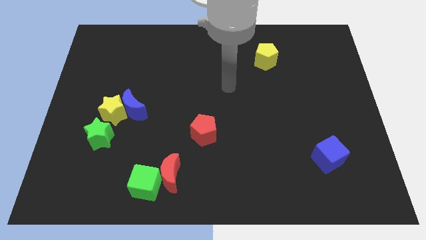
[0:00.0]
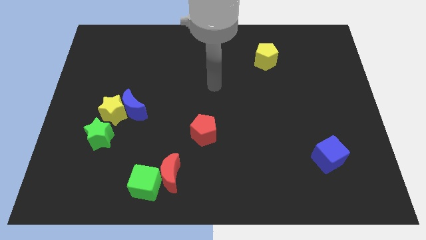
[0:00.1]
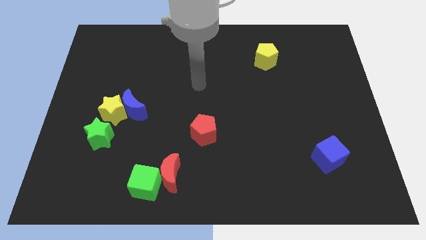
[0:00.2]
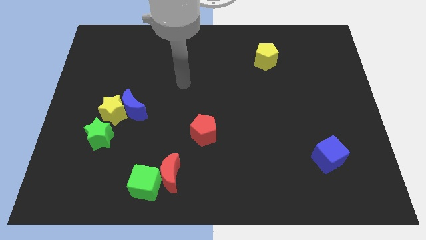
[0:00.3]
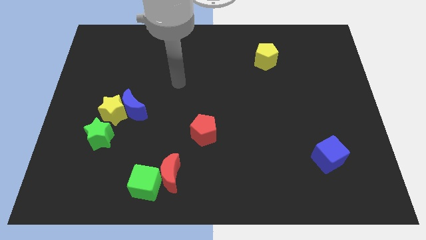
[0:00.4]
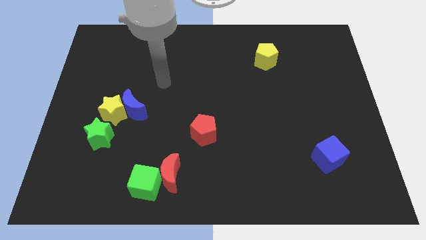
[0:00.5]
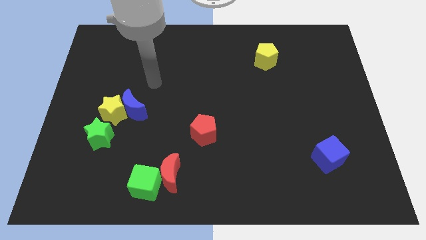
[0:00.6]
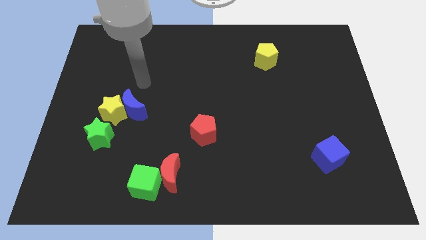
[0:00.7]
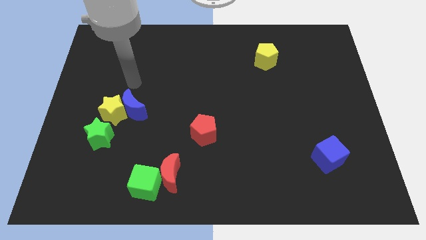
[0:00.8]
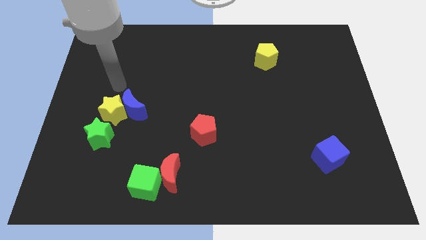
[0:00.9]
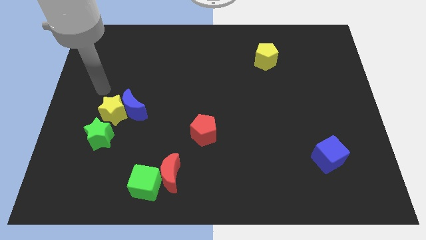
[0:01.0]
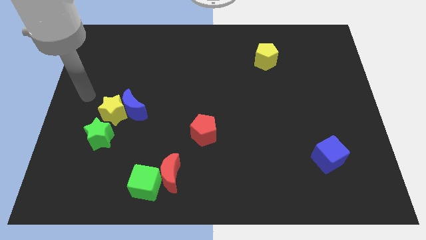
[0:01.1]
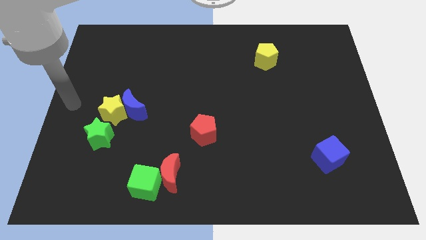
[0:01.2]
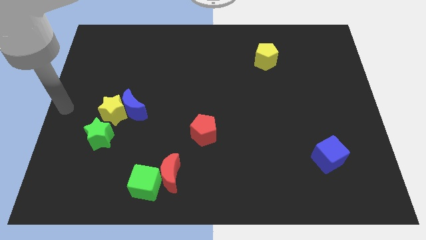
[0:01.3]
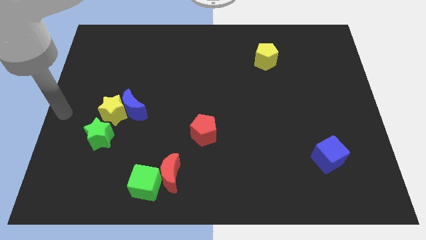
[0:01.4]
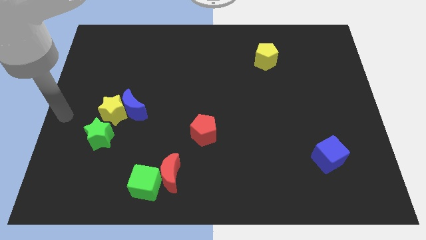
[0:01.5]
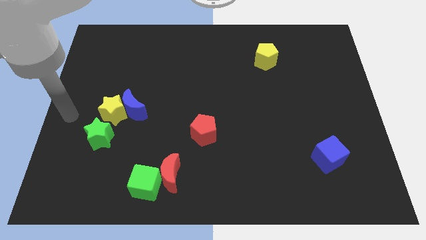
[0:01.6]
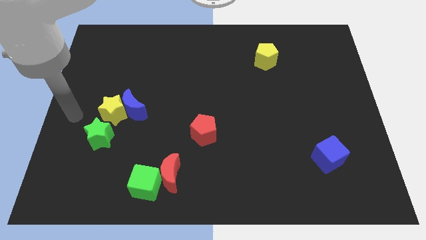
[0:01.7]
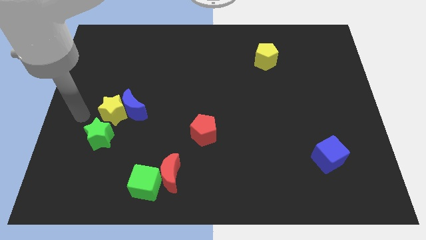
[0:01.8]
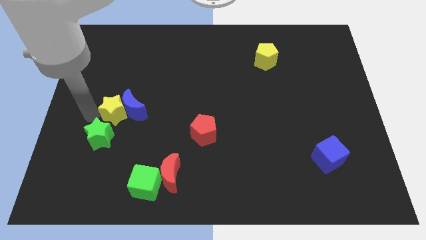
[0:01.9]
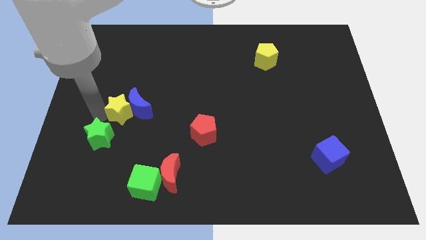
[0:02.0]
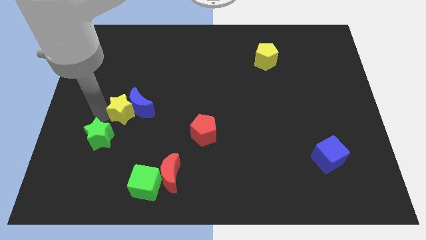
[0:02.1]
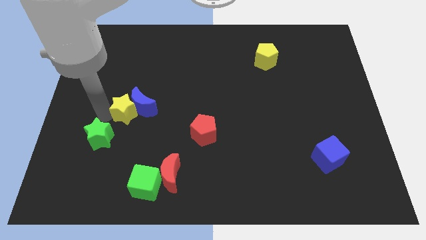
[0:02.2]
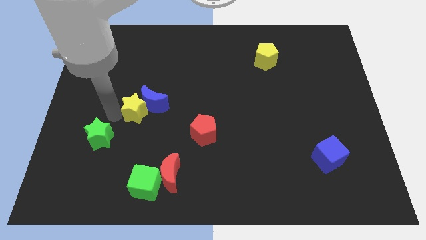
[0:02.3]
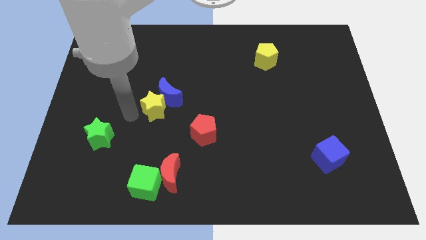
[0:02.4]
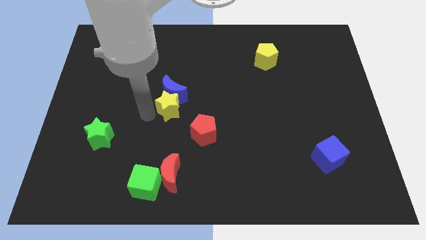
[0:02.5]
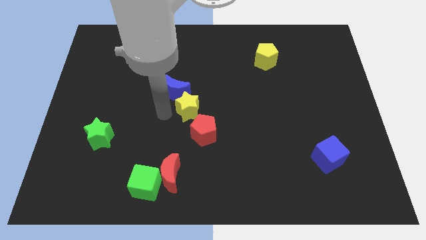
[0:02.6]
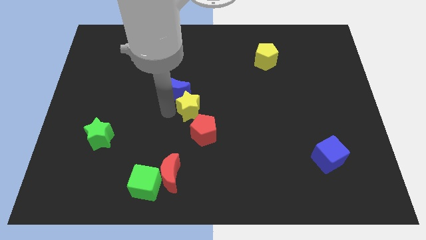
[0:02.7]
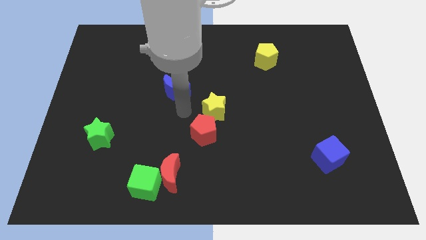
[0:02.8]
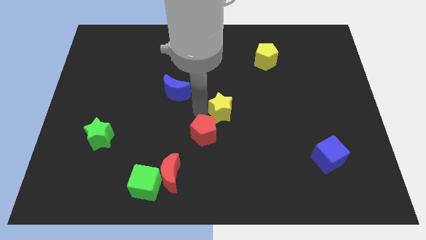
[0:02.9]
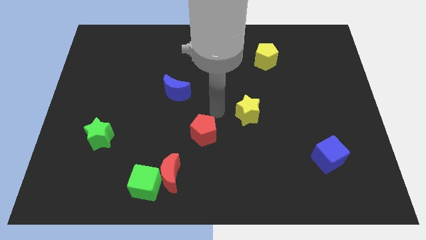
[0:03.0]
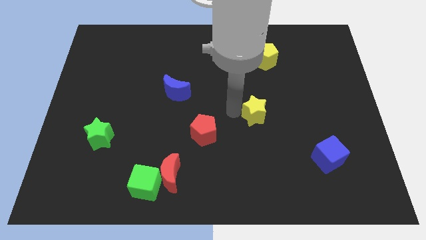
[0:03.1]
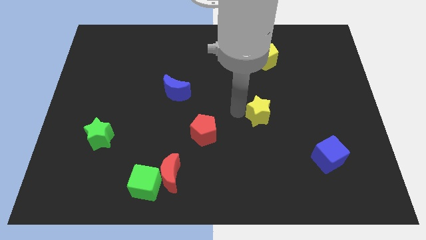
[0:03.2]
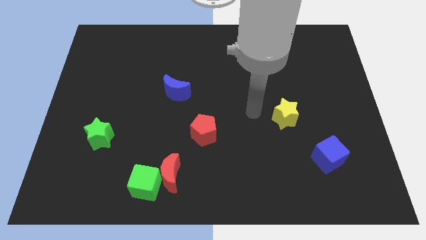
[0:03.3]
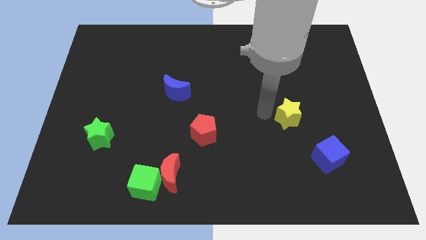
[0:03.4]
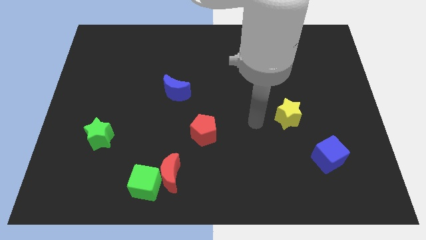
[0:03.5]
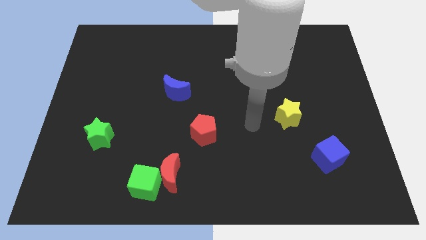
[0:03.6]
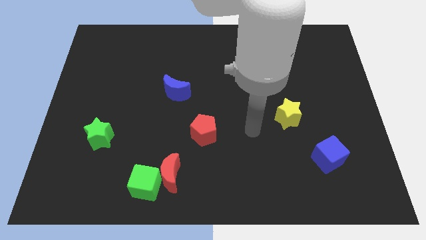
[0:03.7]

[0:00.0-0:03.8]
place the yellow star diagonally top left to the blue cube

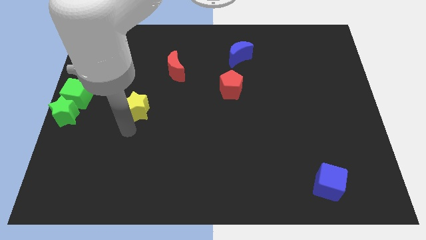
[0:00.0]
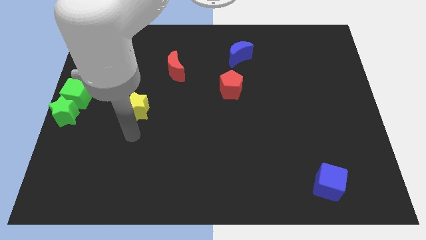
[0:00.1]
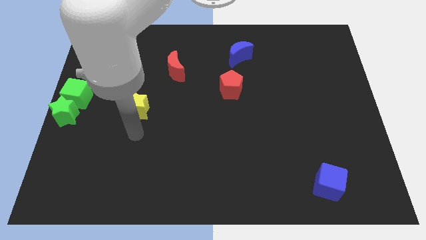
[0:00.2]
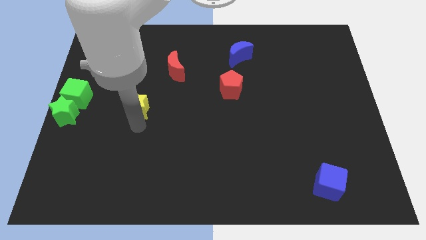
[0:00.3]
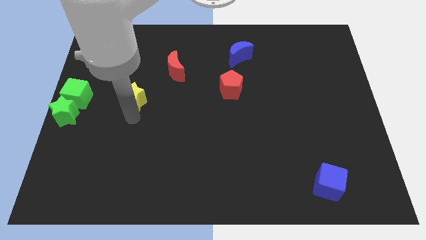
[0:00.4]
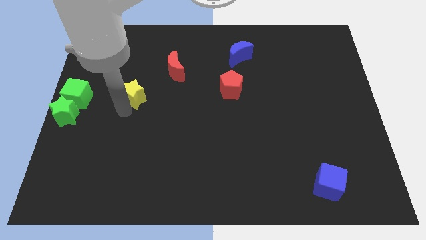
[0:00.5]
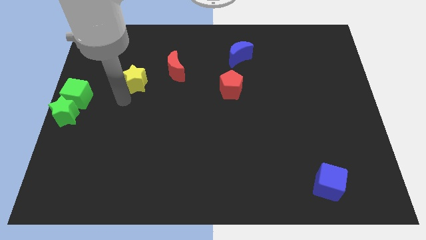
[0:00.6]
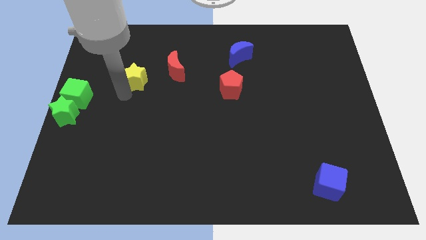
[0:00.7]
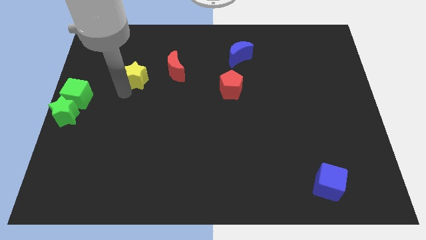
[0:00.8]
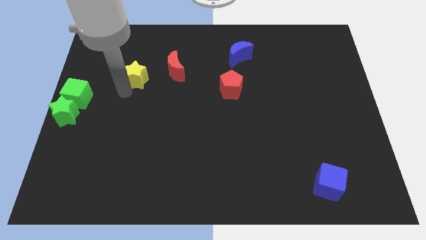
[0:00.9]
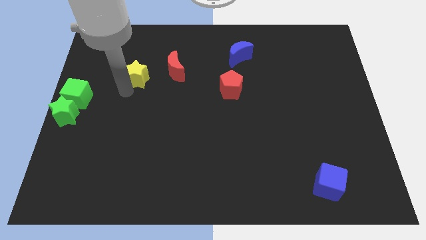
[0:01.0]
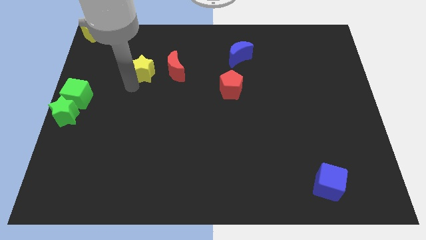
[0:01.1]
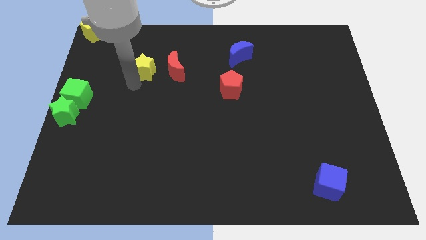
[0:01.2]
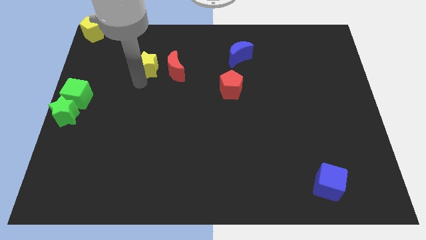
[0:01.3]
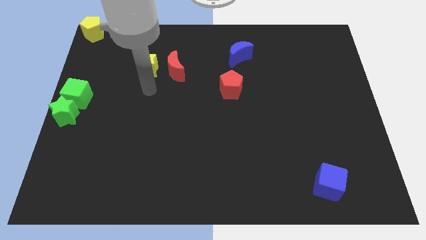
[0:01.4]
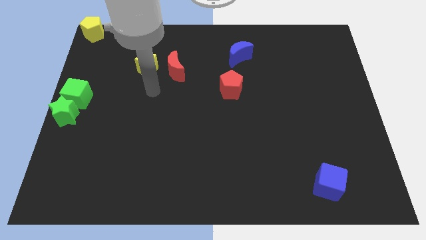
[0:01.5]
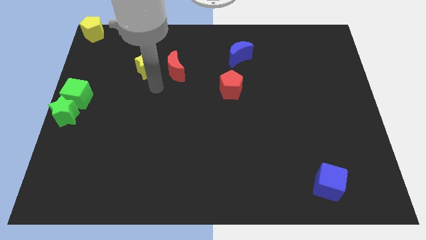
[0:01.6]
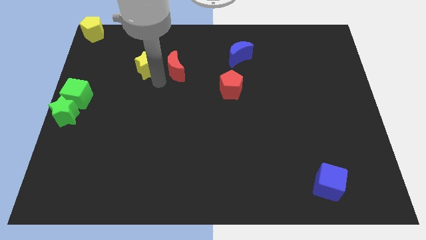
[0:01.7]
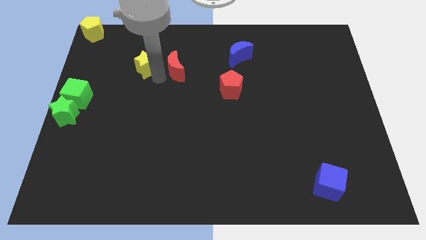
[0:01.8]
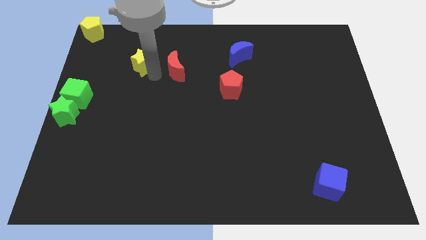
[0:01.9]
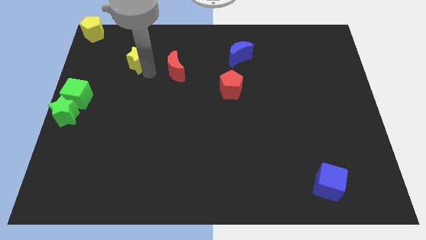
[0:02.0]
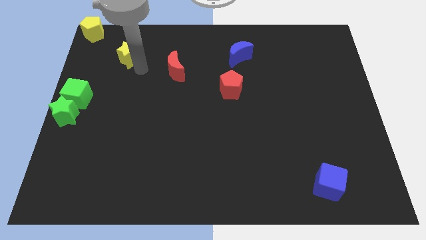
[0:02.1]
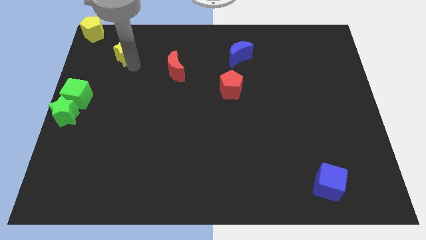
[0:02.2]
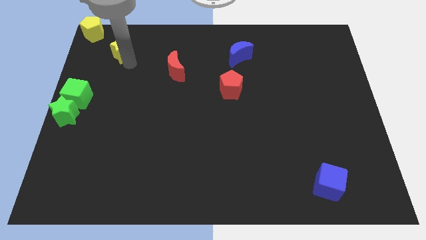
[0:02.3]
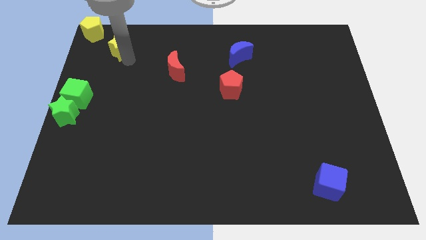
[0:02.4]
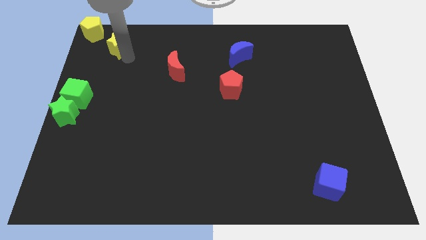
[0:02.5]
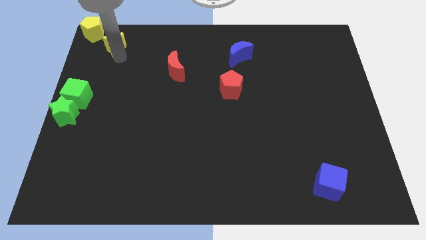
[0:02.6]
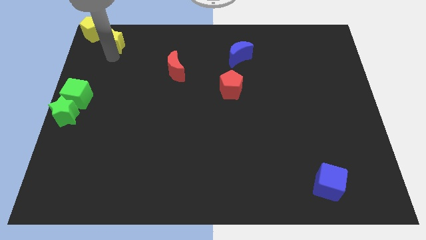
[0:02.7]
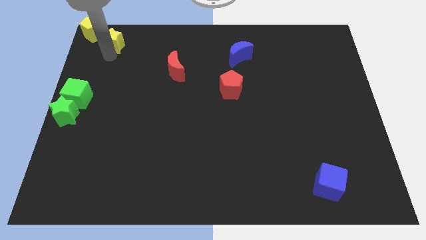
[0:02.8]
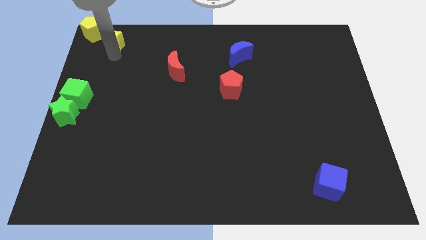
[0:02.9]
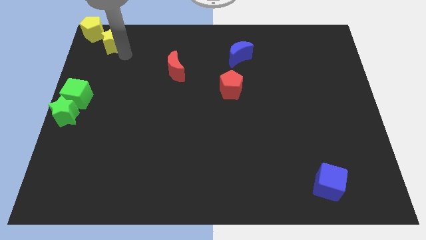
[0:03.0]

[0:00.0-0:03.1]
place the yellow star diagonal to the yellow pentagon

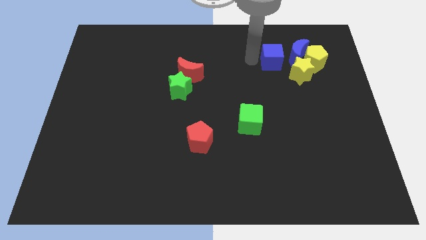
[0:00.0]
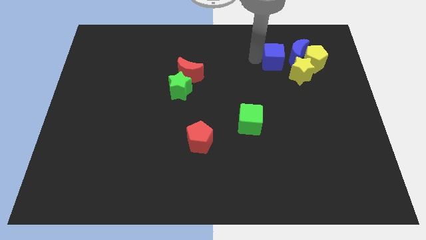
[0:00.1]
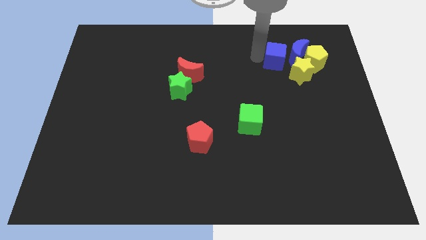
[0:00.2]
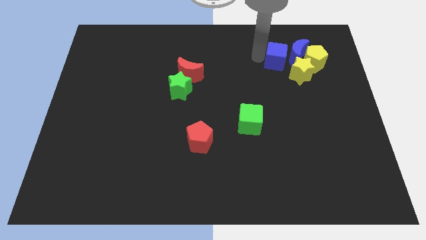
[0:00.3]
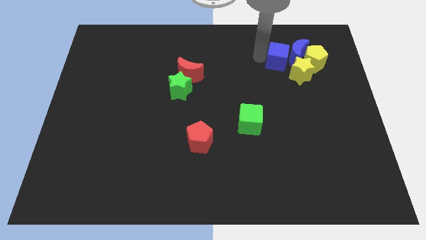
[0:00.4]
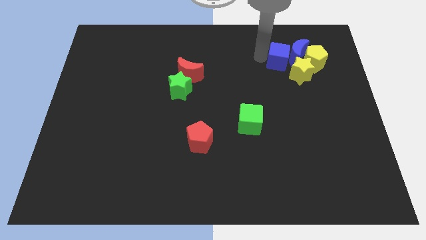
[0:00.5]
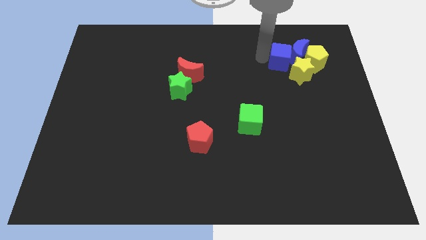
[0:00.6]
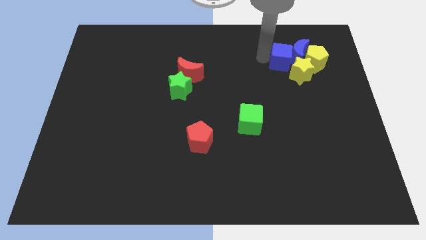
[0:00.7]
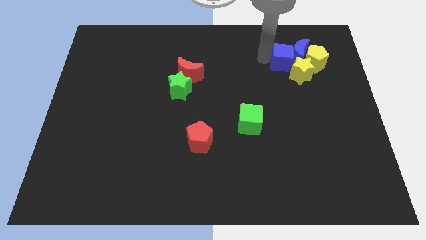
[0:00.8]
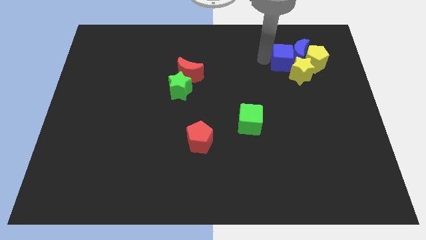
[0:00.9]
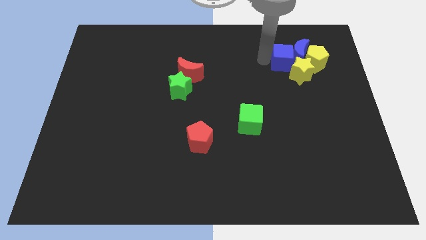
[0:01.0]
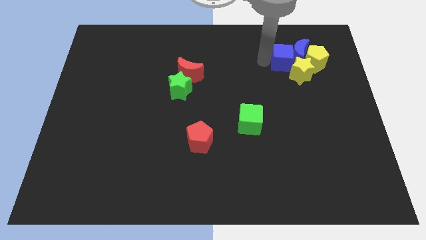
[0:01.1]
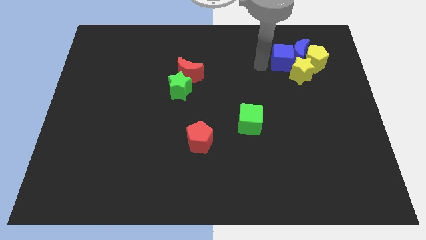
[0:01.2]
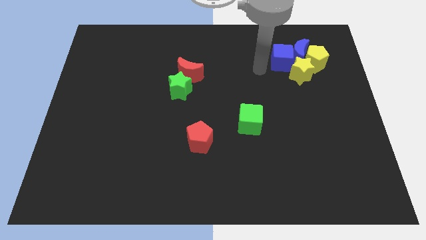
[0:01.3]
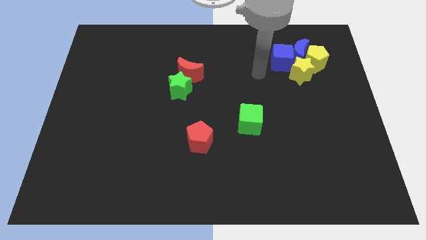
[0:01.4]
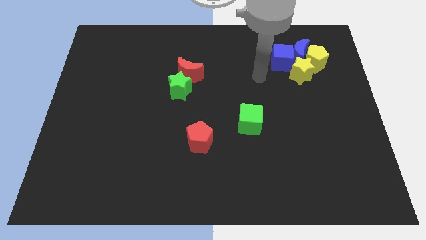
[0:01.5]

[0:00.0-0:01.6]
slightly push the blue cube into the blue crescent

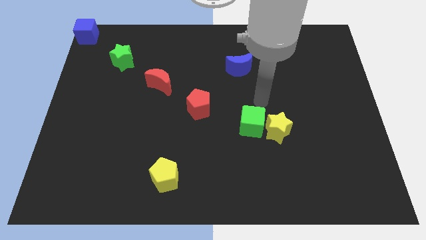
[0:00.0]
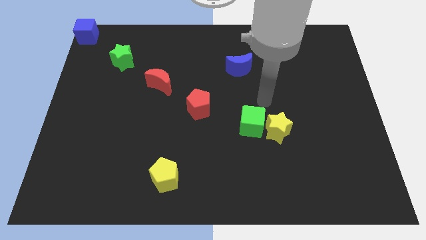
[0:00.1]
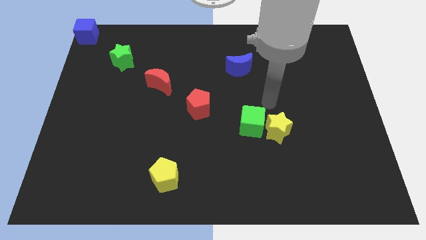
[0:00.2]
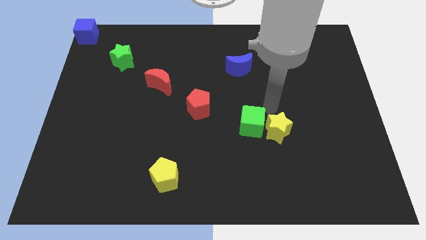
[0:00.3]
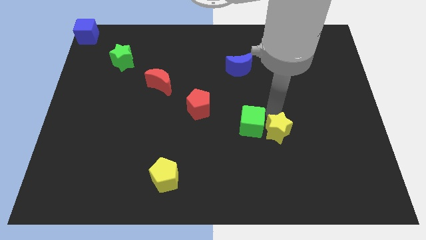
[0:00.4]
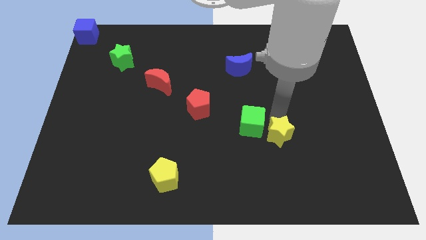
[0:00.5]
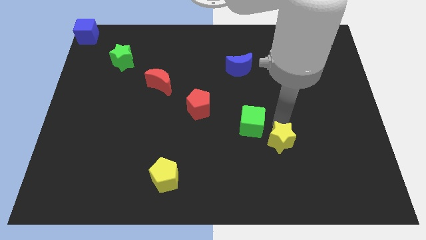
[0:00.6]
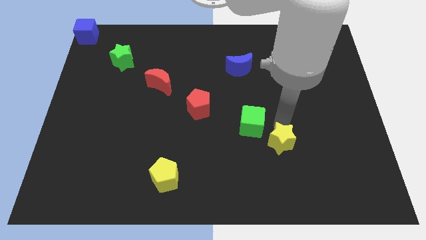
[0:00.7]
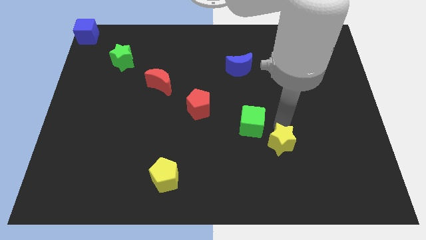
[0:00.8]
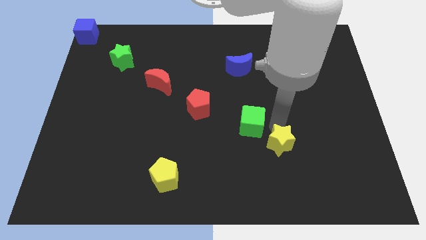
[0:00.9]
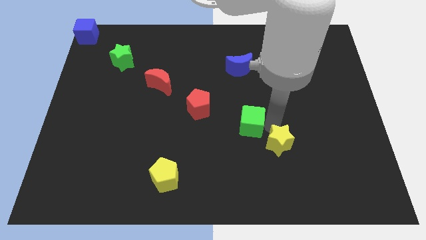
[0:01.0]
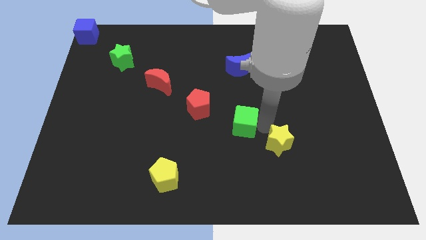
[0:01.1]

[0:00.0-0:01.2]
push the yellow star slightly to the bottom of the board
